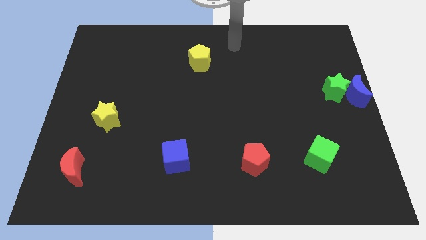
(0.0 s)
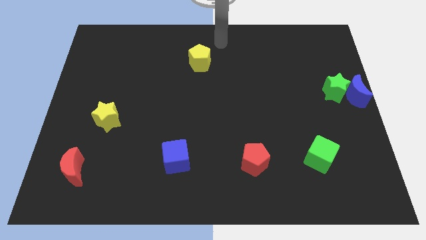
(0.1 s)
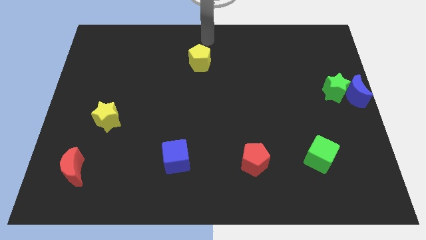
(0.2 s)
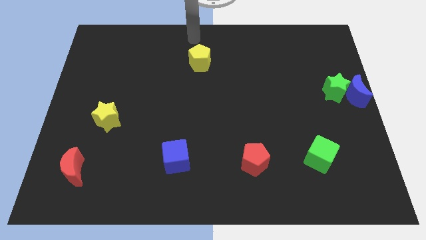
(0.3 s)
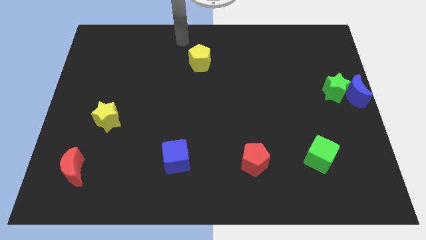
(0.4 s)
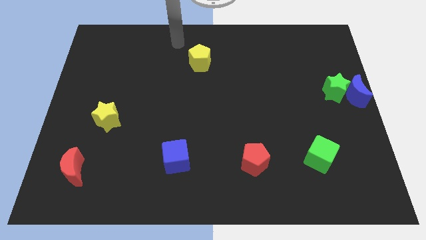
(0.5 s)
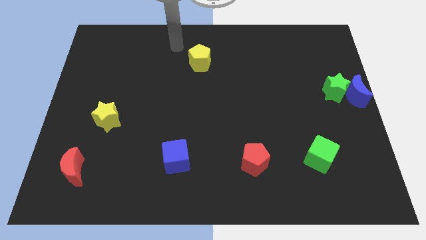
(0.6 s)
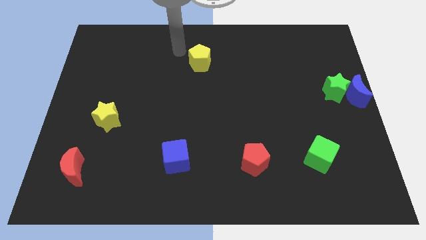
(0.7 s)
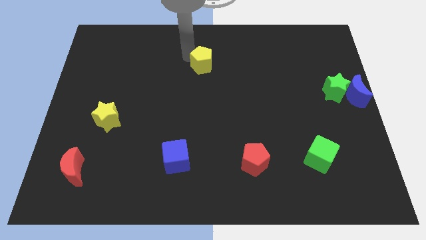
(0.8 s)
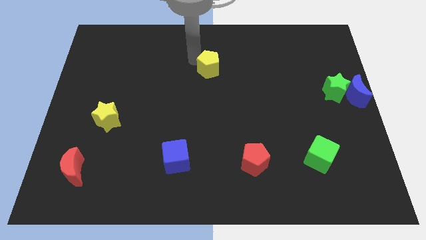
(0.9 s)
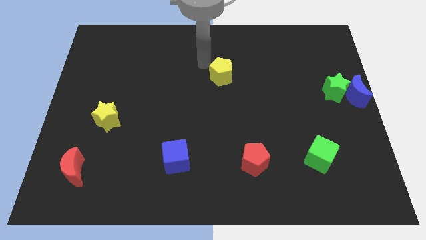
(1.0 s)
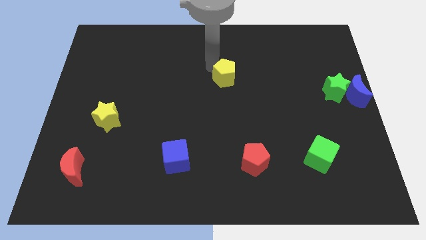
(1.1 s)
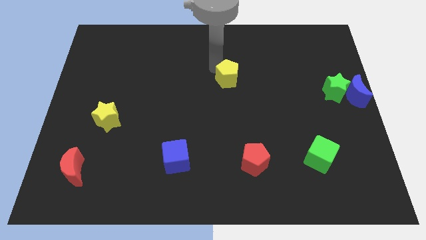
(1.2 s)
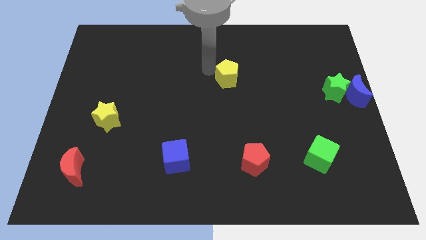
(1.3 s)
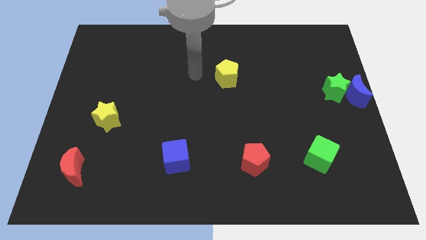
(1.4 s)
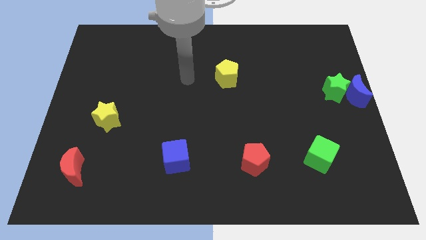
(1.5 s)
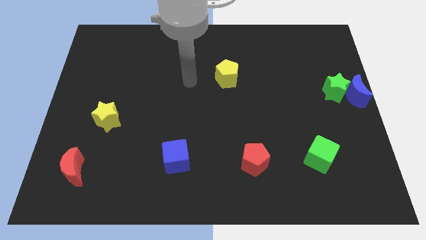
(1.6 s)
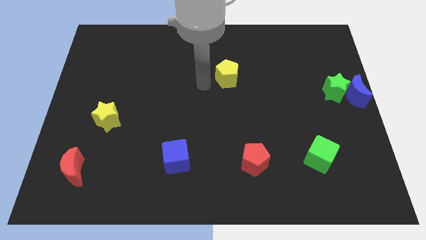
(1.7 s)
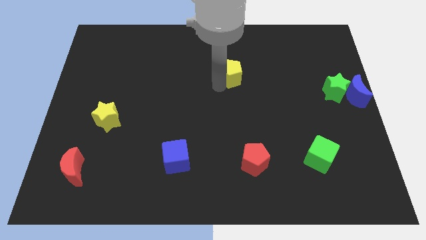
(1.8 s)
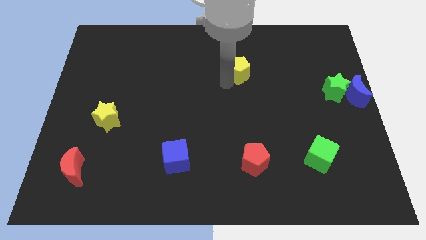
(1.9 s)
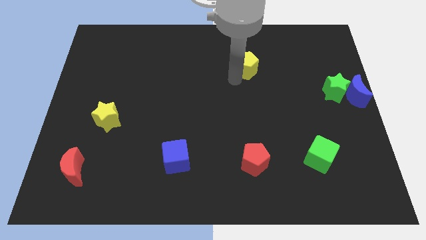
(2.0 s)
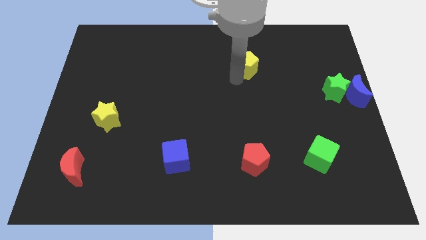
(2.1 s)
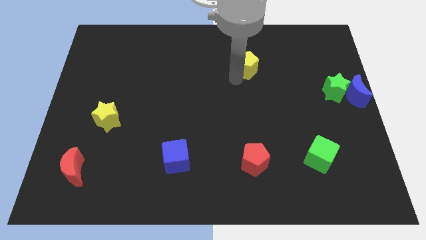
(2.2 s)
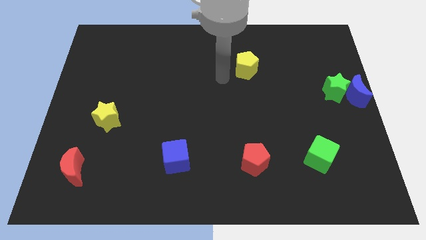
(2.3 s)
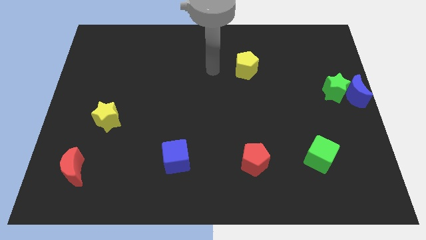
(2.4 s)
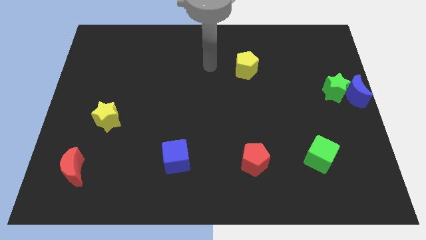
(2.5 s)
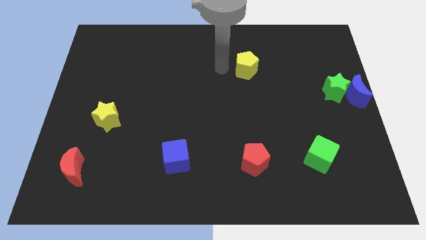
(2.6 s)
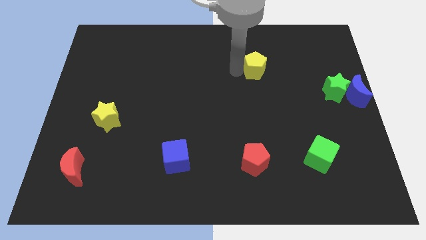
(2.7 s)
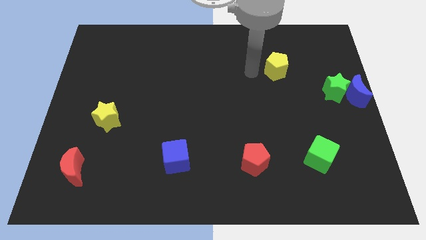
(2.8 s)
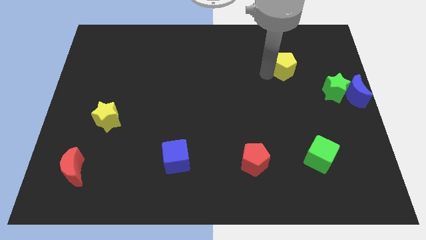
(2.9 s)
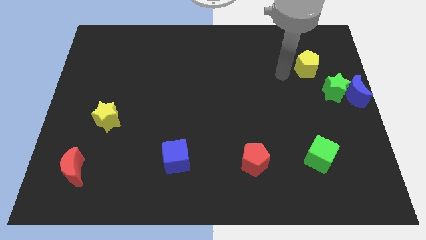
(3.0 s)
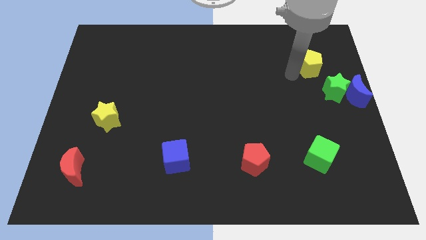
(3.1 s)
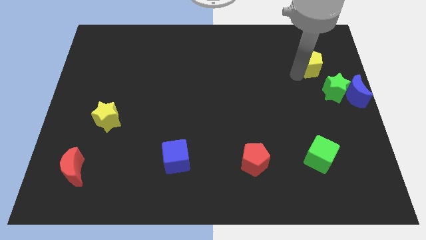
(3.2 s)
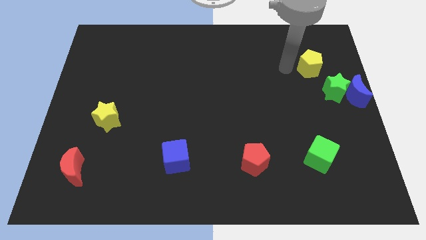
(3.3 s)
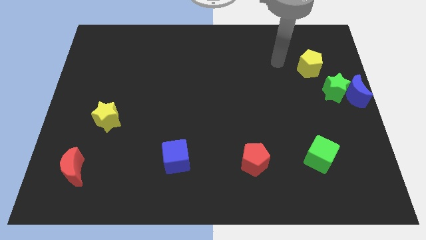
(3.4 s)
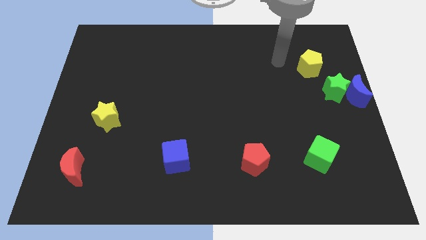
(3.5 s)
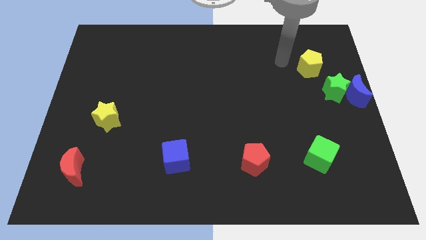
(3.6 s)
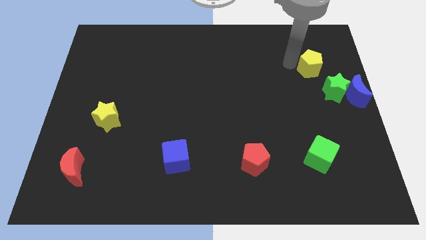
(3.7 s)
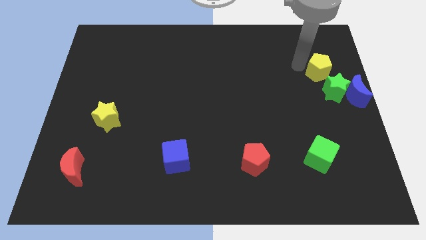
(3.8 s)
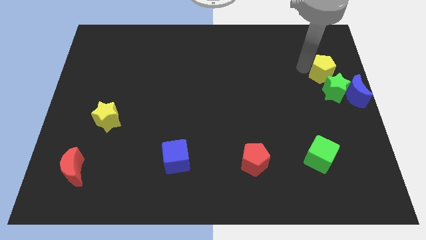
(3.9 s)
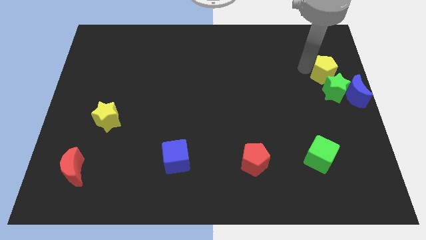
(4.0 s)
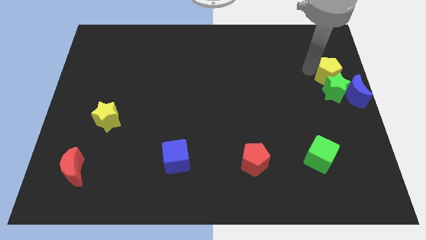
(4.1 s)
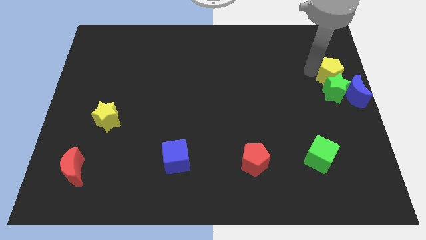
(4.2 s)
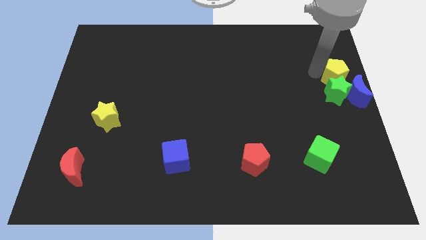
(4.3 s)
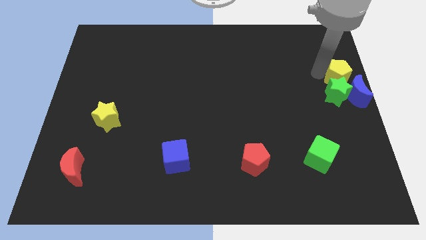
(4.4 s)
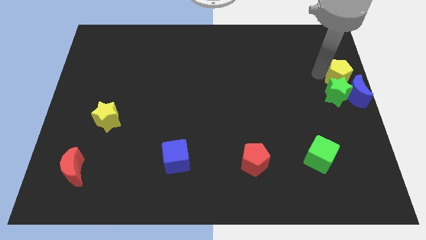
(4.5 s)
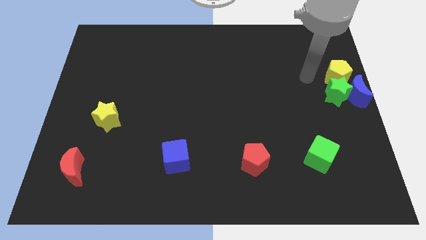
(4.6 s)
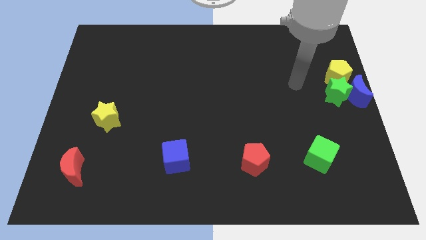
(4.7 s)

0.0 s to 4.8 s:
place the yellow pentagon on top of green star

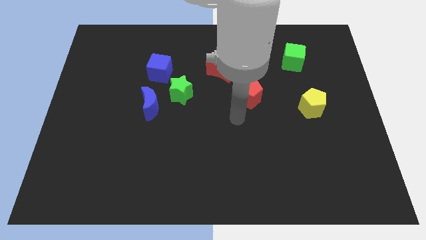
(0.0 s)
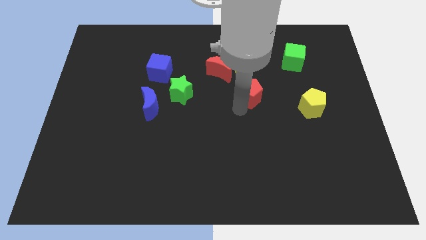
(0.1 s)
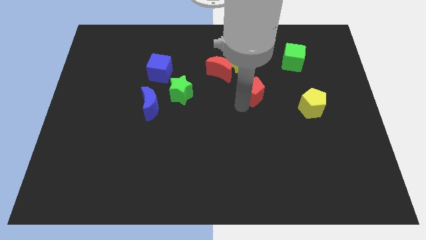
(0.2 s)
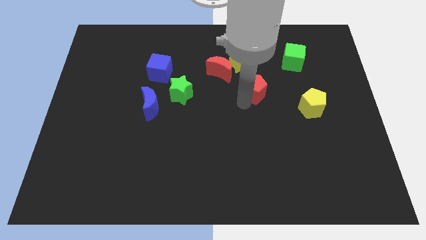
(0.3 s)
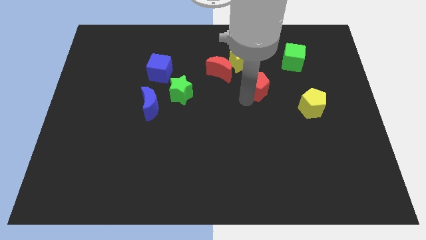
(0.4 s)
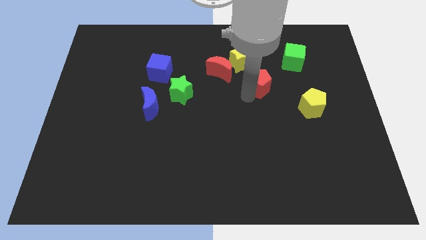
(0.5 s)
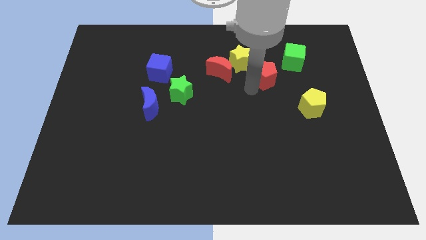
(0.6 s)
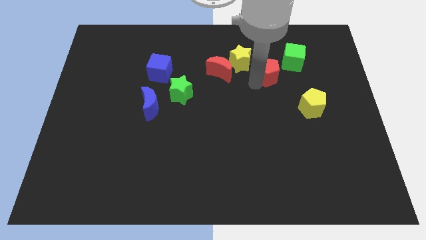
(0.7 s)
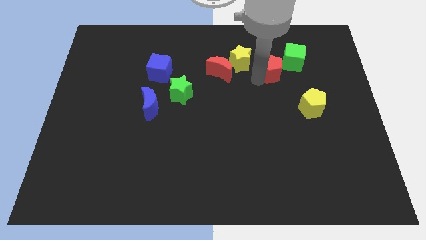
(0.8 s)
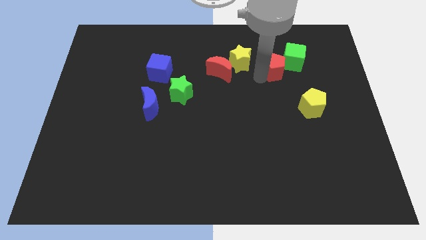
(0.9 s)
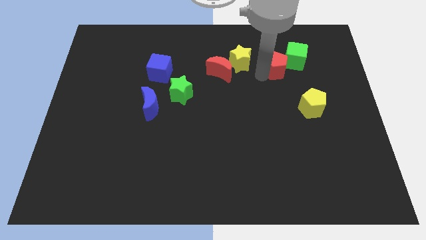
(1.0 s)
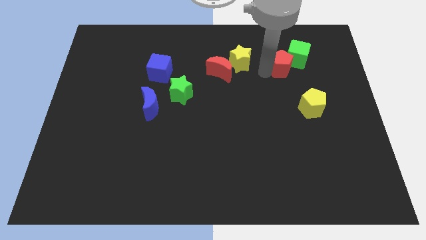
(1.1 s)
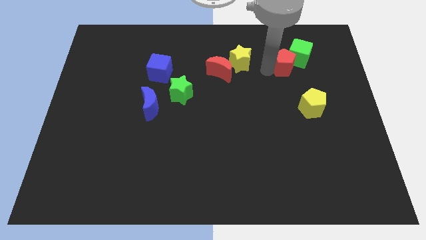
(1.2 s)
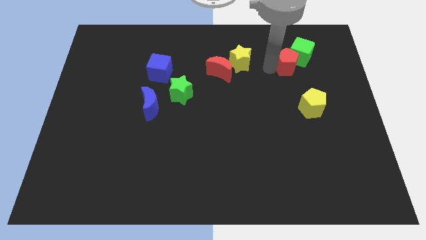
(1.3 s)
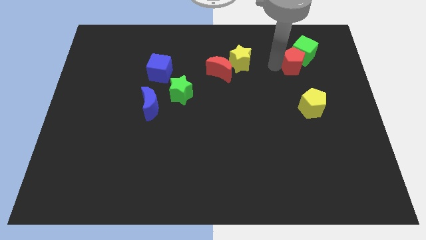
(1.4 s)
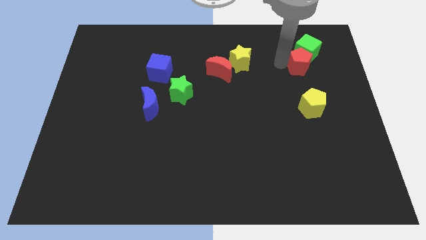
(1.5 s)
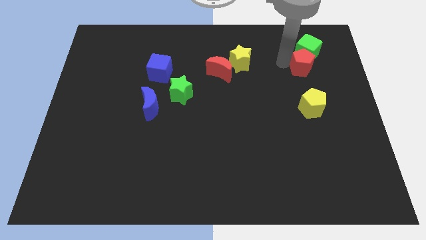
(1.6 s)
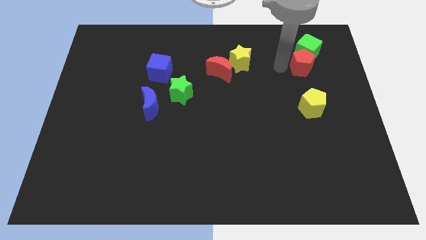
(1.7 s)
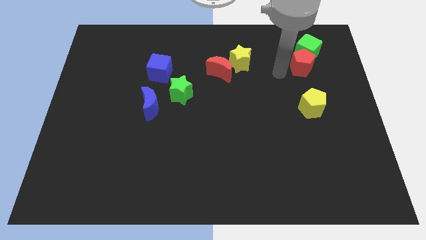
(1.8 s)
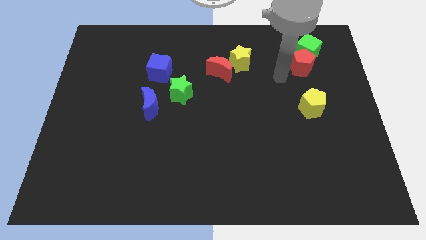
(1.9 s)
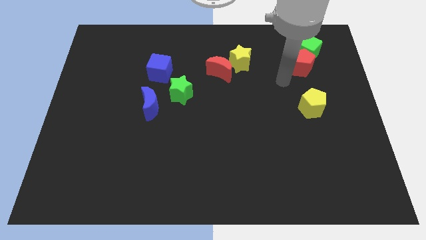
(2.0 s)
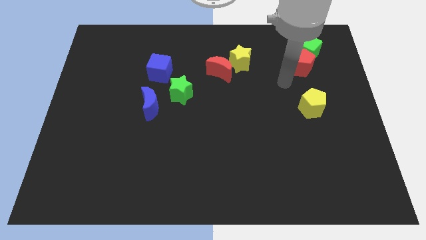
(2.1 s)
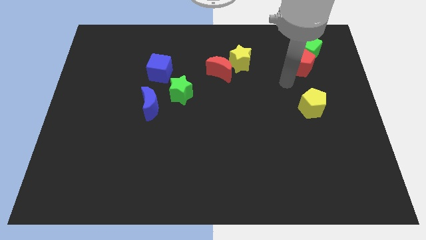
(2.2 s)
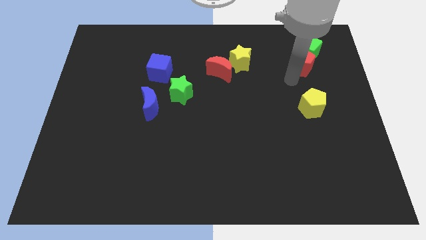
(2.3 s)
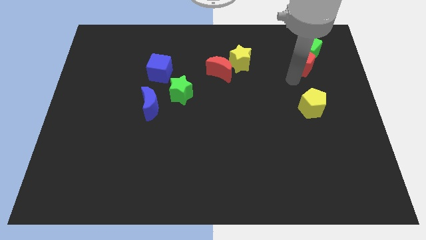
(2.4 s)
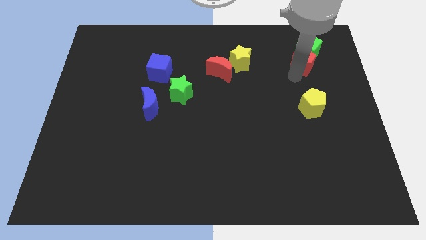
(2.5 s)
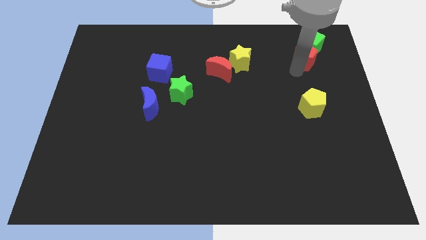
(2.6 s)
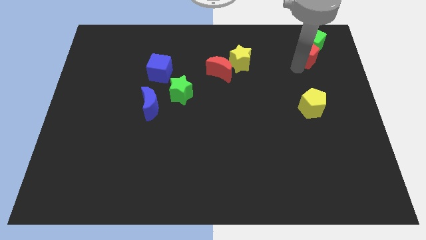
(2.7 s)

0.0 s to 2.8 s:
place red pentagon above yellow pentagon

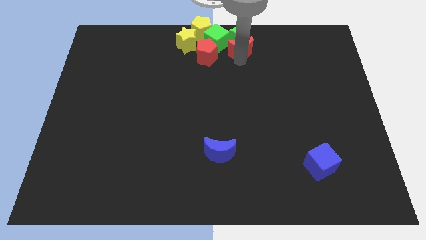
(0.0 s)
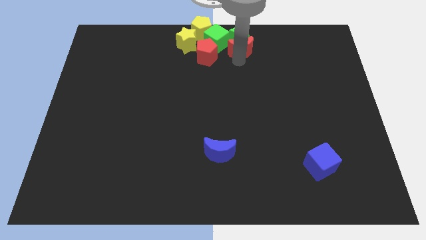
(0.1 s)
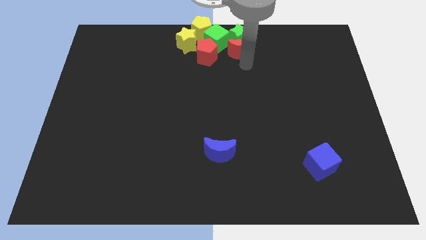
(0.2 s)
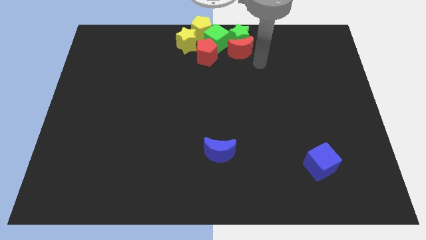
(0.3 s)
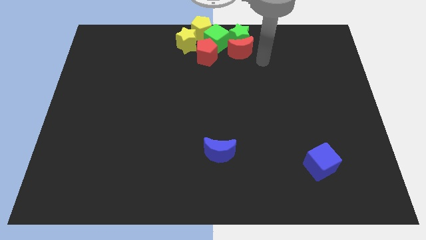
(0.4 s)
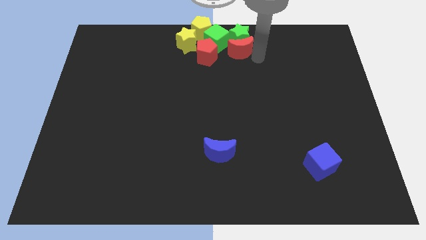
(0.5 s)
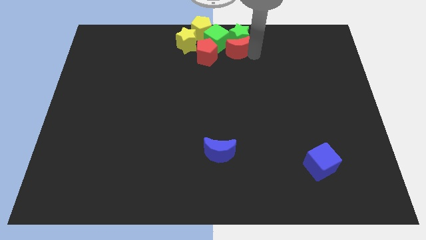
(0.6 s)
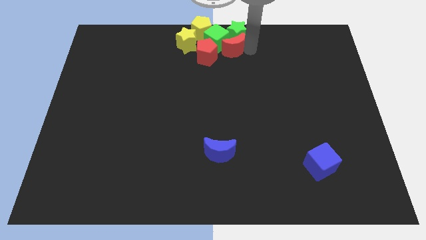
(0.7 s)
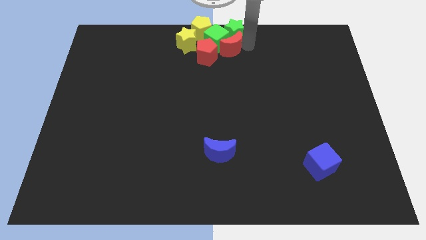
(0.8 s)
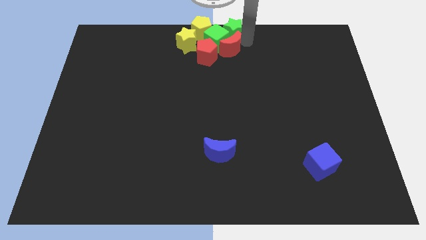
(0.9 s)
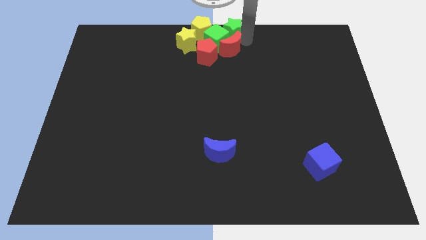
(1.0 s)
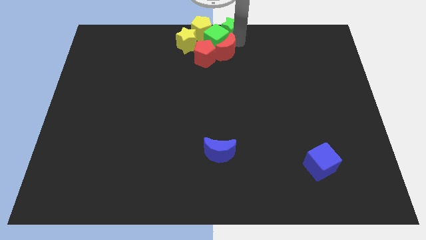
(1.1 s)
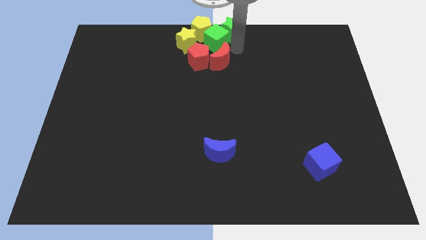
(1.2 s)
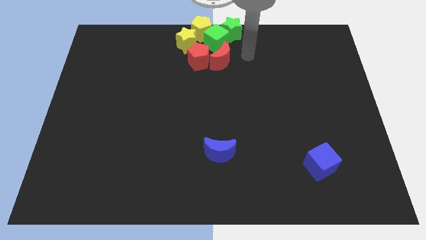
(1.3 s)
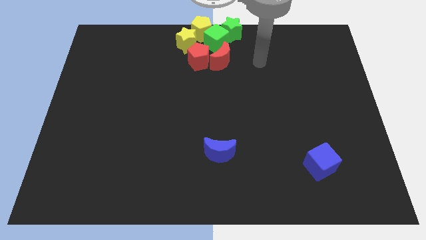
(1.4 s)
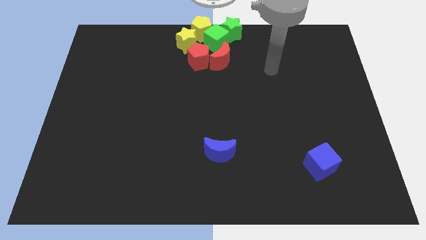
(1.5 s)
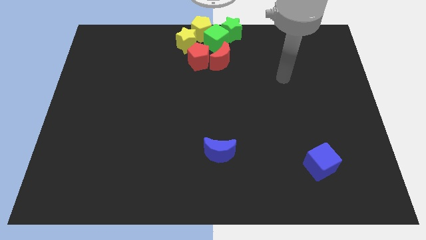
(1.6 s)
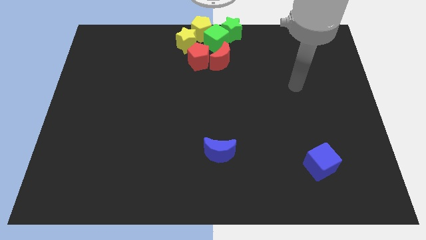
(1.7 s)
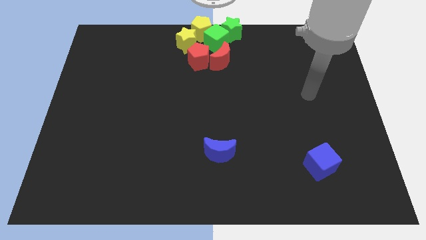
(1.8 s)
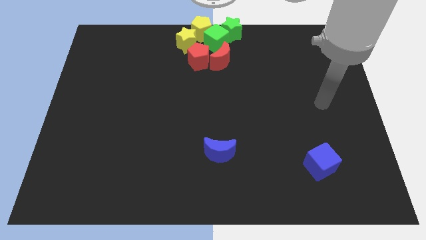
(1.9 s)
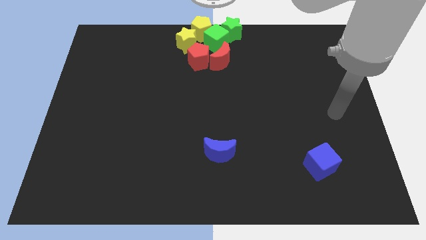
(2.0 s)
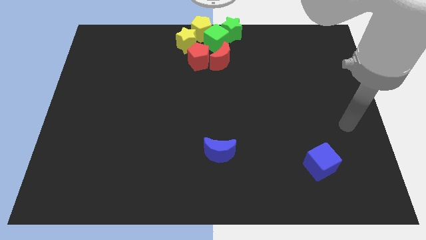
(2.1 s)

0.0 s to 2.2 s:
push the red moon into the red pentagon
